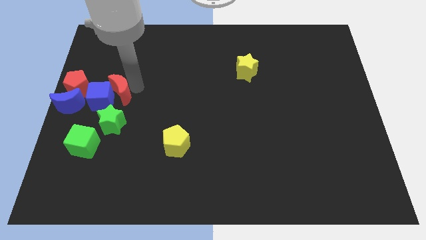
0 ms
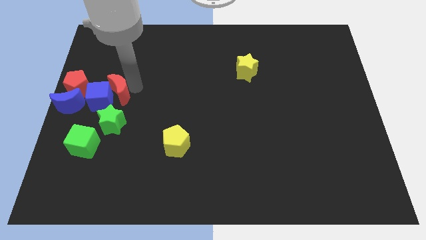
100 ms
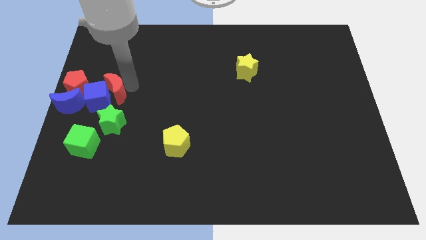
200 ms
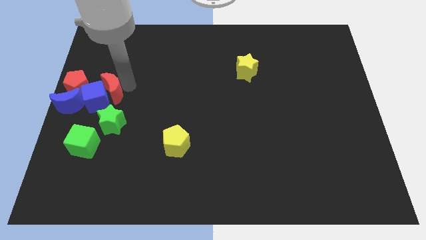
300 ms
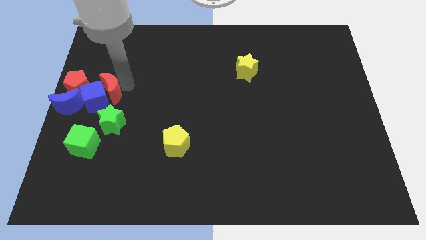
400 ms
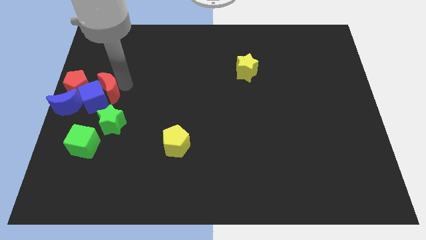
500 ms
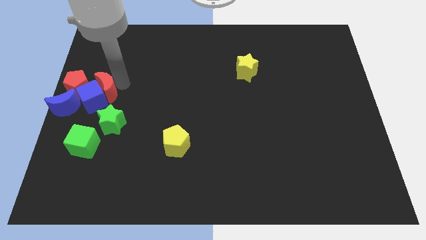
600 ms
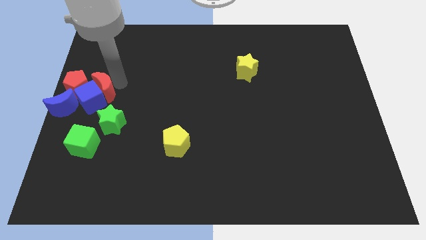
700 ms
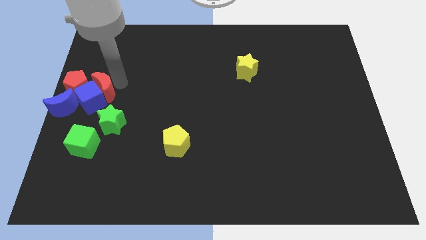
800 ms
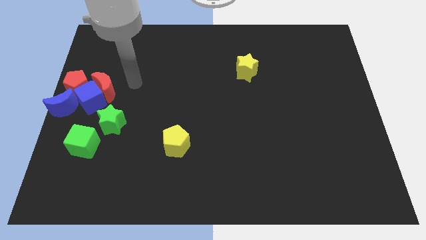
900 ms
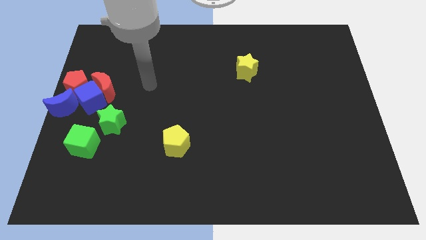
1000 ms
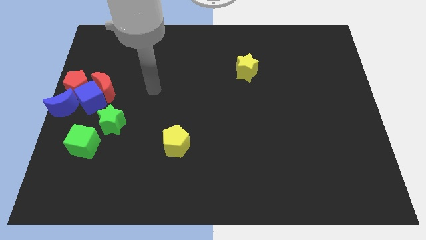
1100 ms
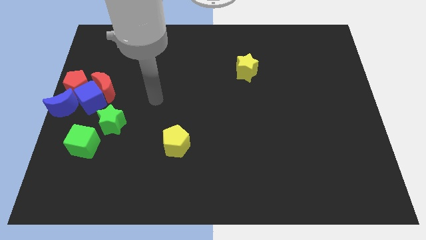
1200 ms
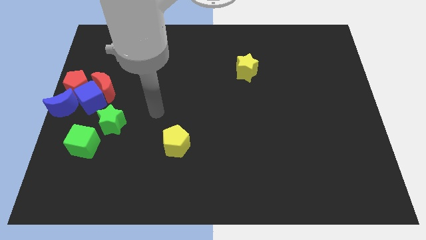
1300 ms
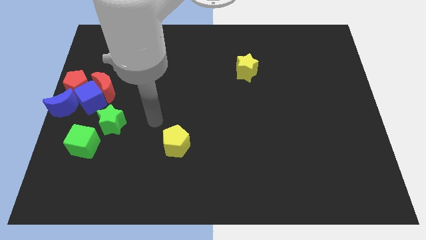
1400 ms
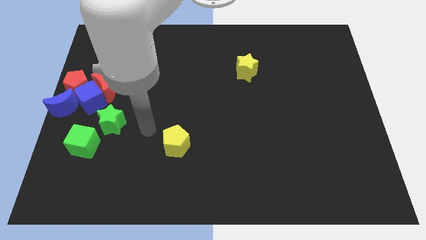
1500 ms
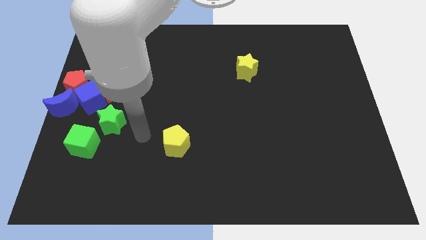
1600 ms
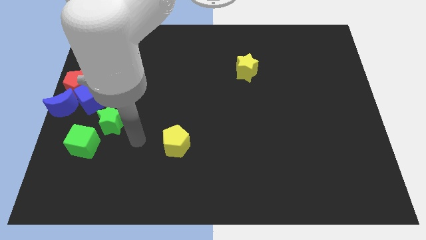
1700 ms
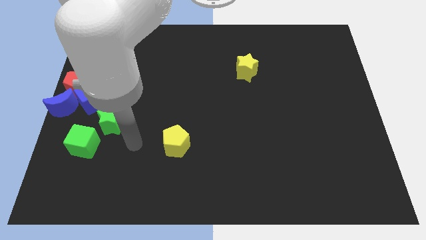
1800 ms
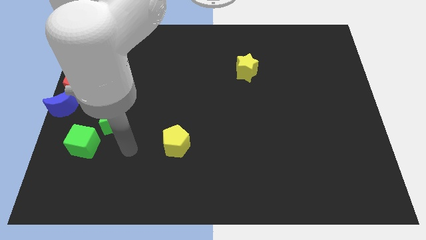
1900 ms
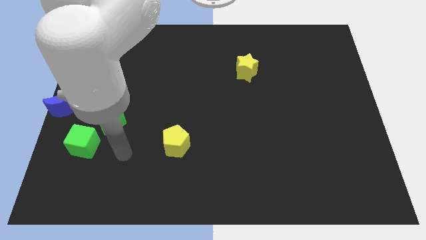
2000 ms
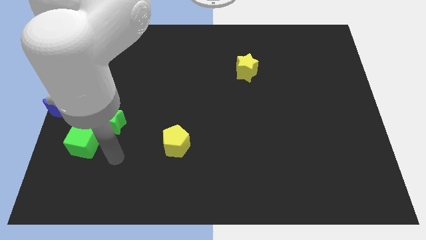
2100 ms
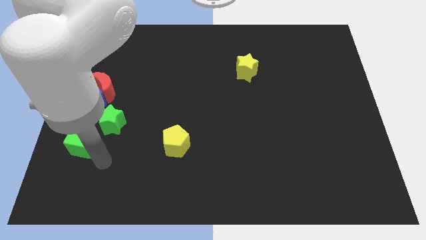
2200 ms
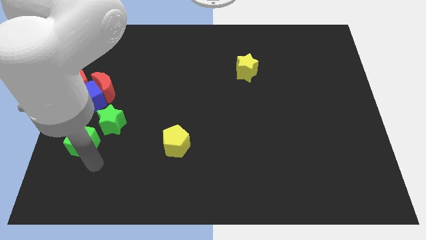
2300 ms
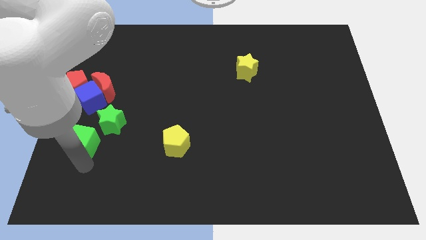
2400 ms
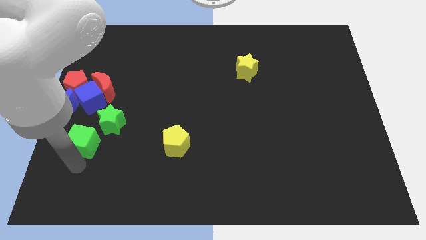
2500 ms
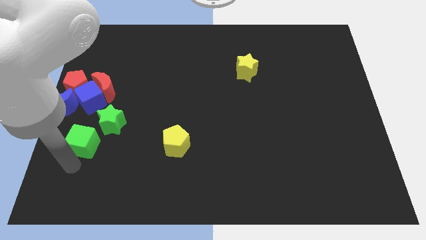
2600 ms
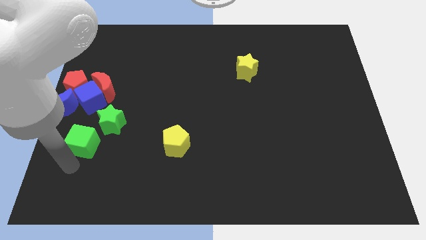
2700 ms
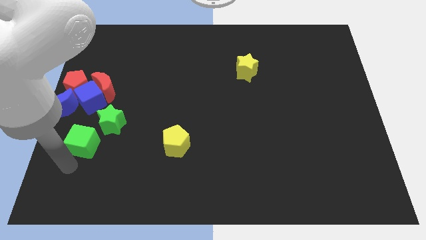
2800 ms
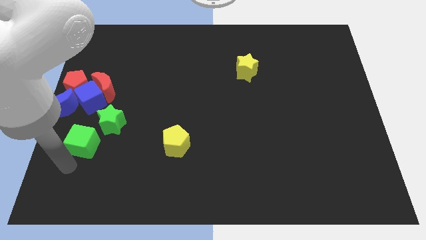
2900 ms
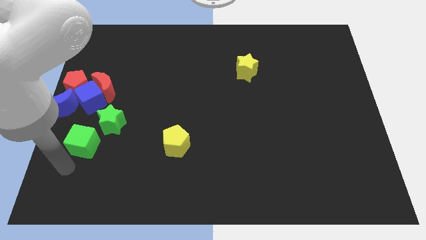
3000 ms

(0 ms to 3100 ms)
place your arm at the bottom side of the green cube

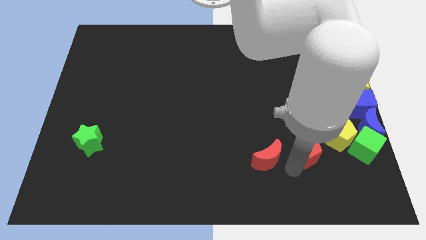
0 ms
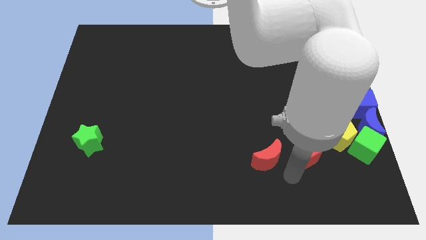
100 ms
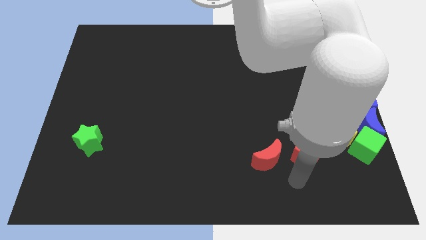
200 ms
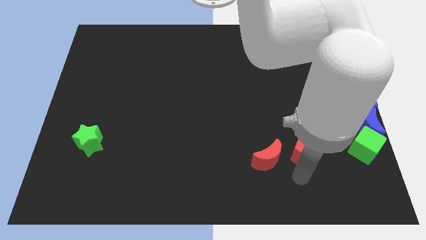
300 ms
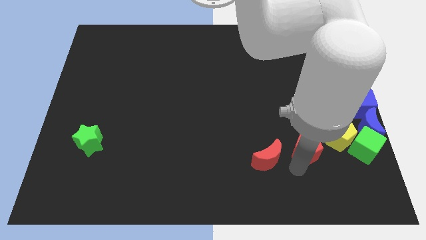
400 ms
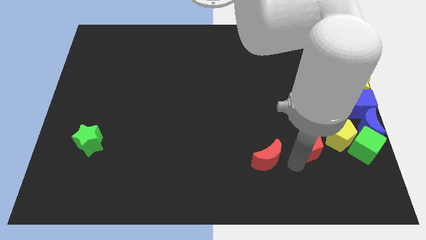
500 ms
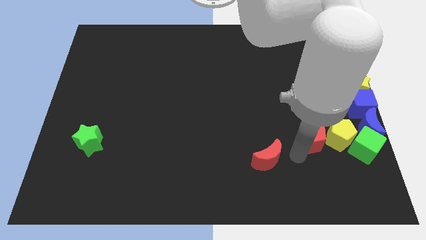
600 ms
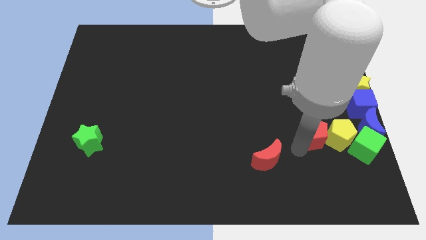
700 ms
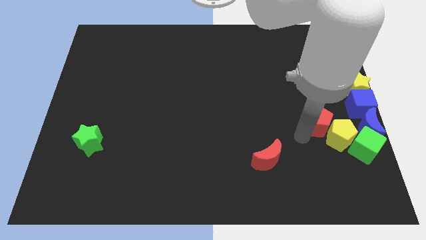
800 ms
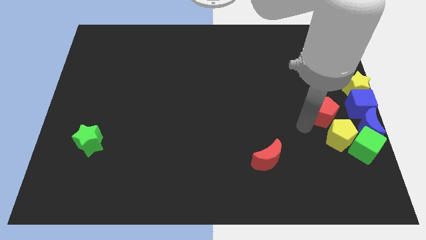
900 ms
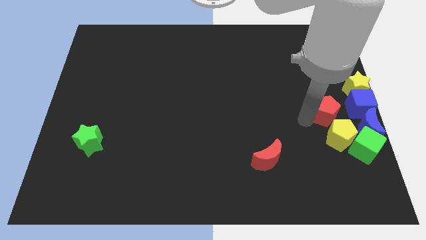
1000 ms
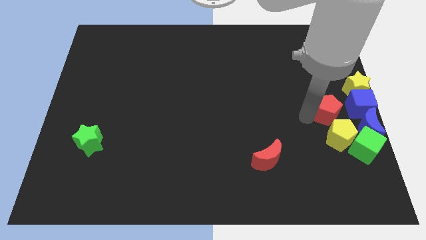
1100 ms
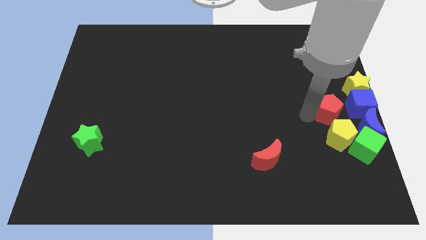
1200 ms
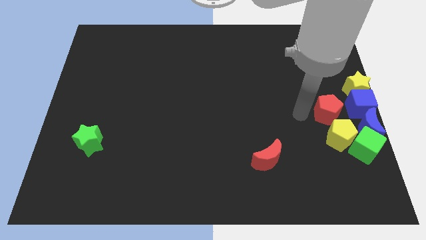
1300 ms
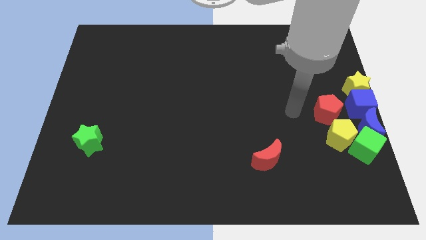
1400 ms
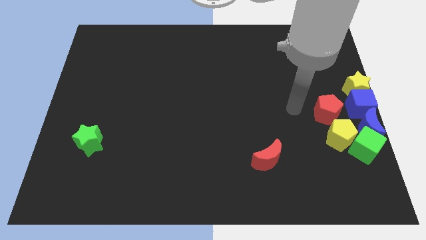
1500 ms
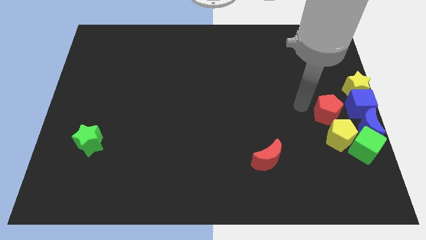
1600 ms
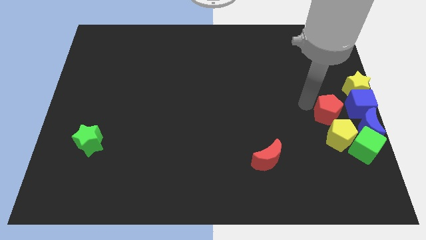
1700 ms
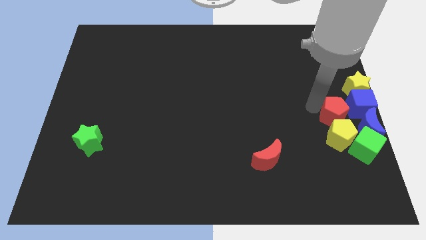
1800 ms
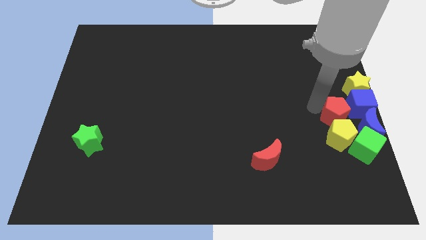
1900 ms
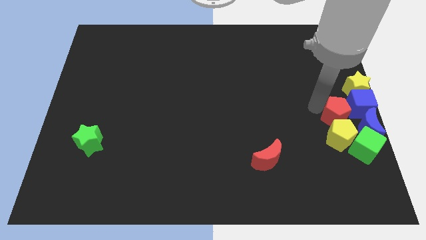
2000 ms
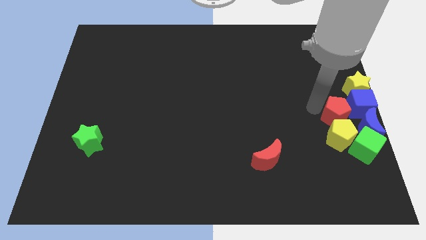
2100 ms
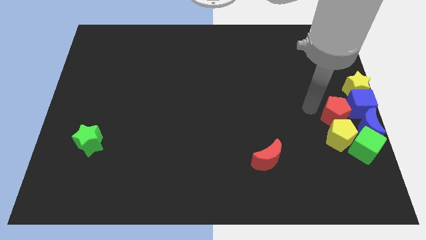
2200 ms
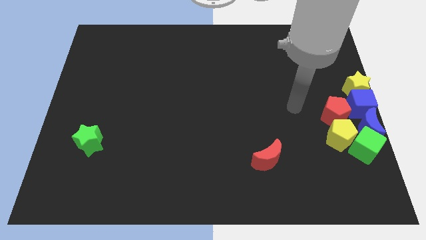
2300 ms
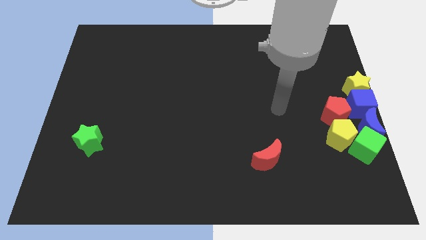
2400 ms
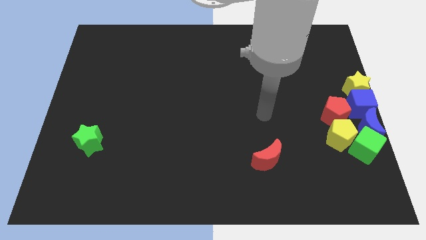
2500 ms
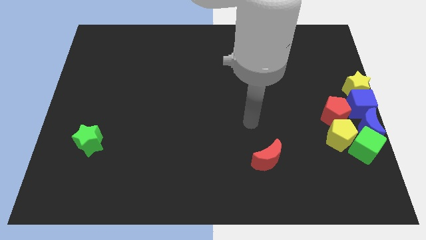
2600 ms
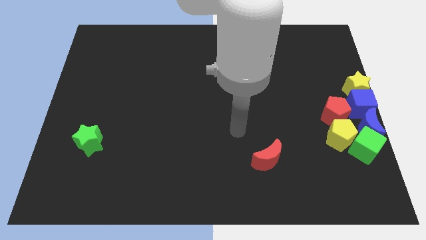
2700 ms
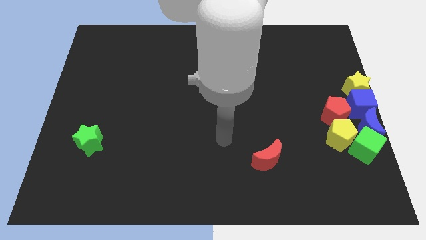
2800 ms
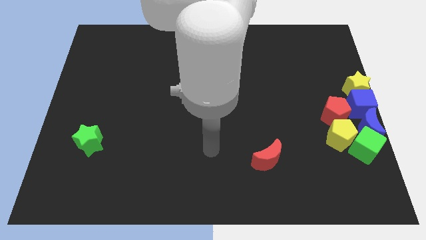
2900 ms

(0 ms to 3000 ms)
place red pentagon to the left of blue cube

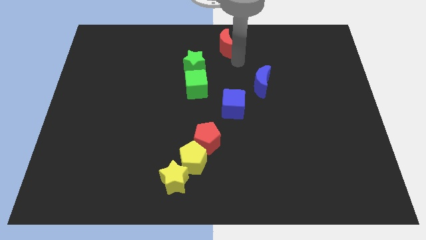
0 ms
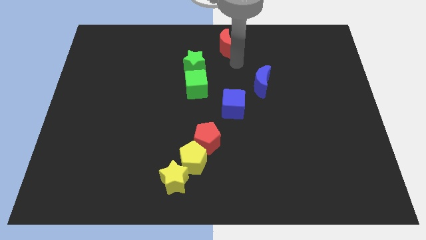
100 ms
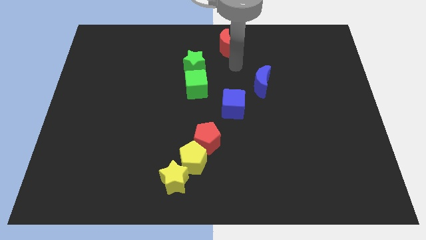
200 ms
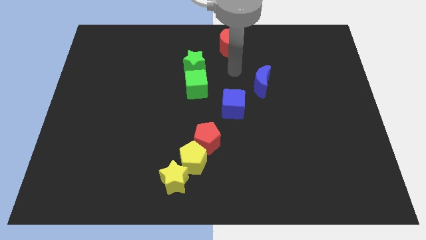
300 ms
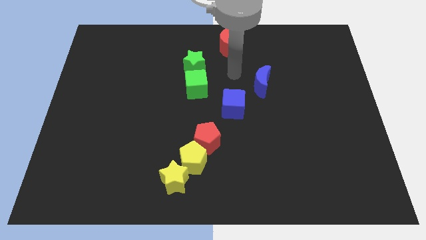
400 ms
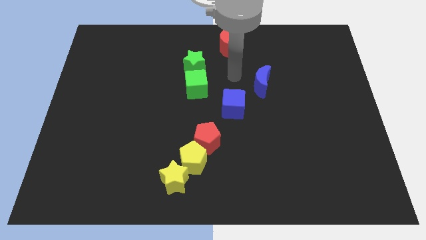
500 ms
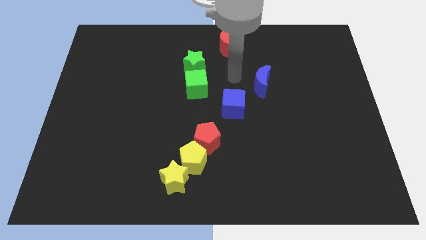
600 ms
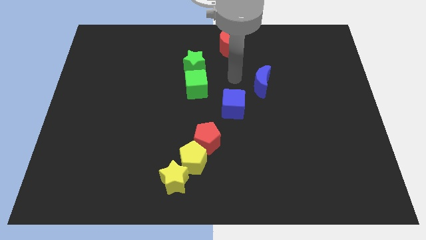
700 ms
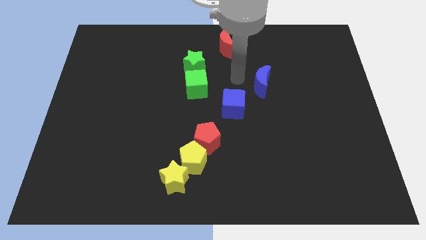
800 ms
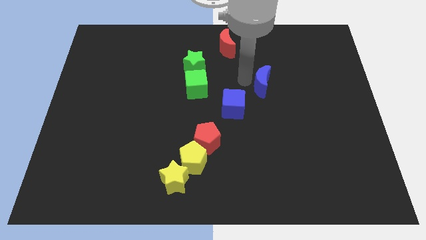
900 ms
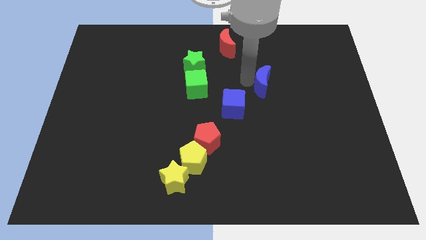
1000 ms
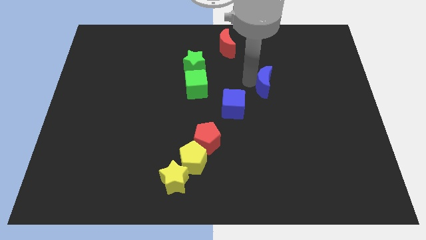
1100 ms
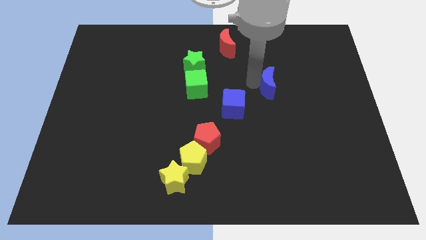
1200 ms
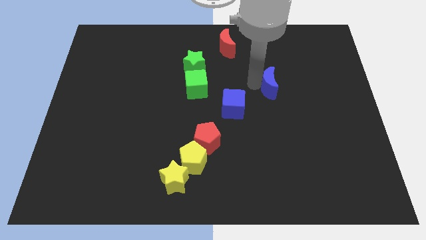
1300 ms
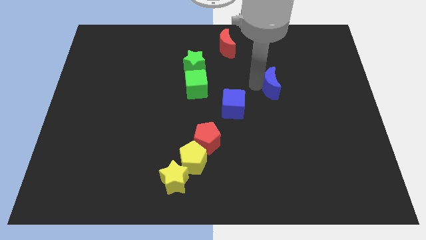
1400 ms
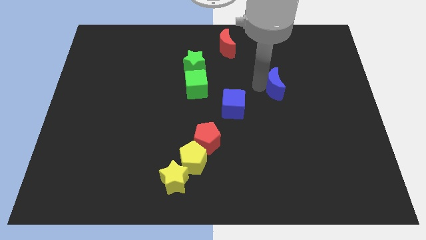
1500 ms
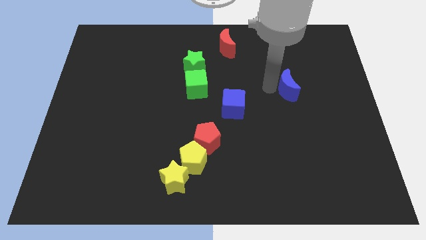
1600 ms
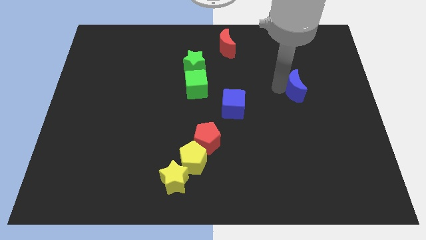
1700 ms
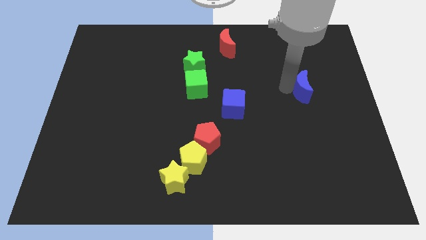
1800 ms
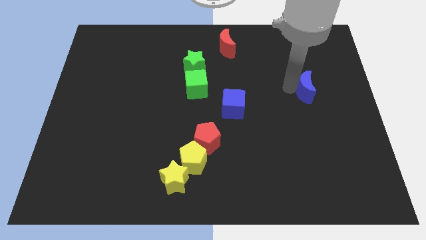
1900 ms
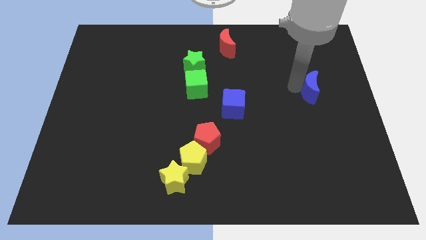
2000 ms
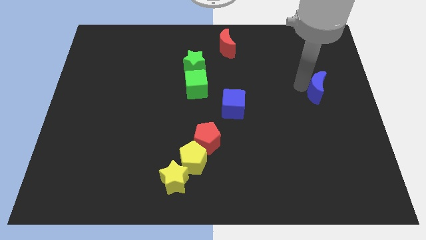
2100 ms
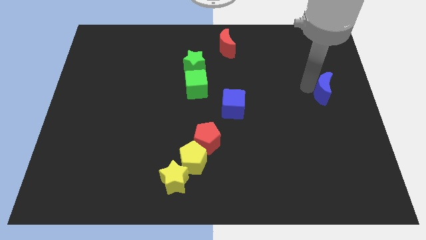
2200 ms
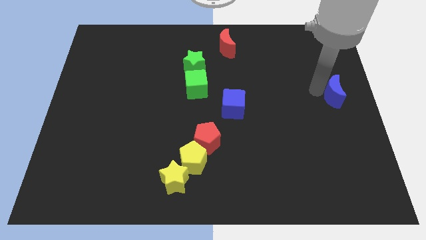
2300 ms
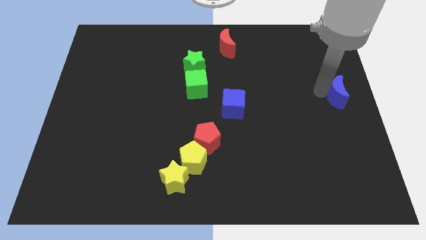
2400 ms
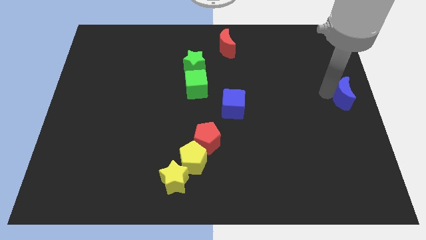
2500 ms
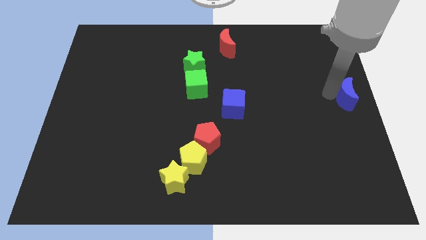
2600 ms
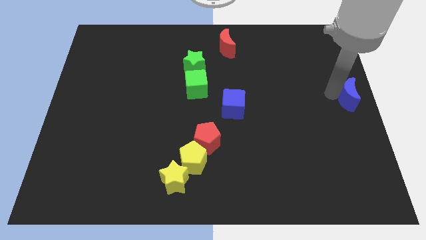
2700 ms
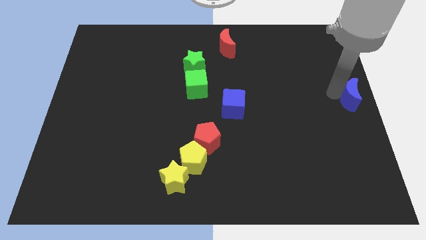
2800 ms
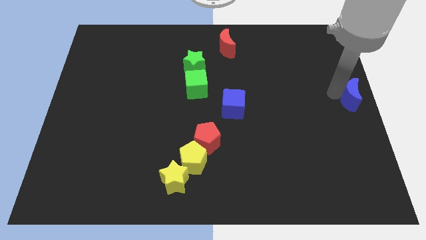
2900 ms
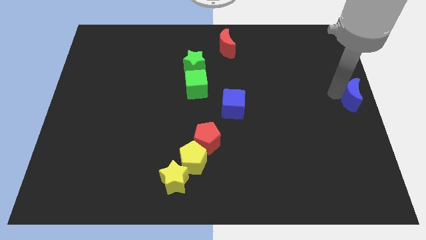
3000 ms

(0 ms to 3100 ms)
push blue crescent towards right middle end of the board
